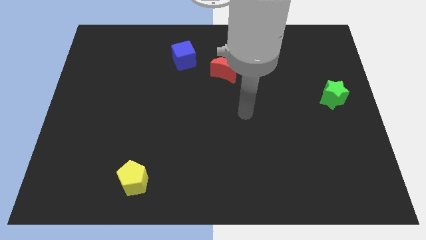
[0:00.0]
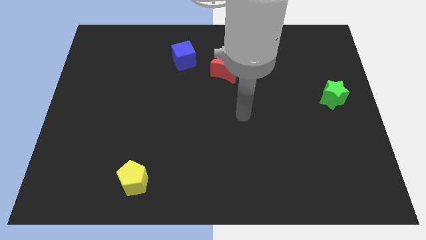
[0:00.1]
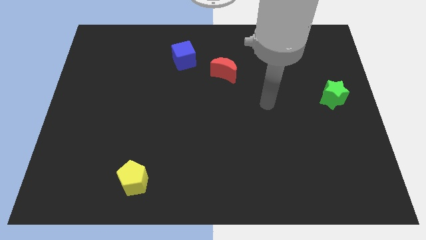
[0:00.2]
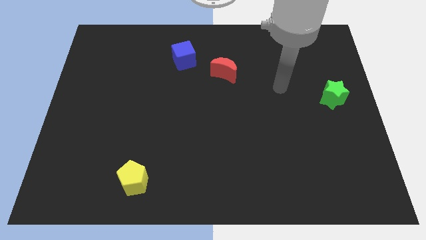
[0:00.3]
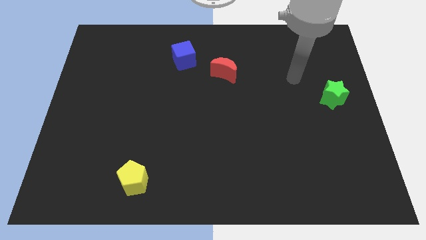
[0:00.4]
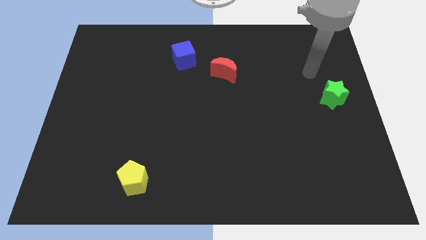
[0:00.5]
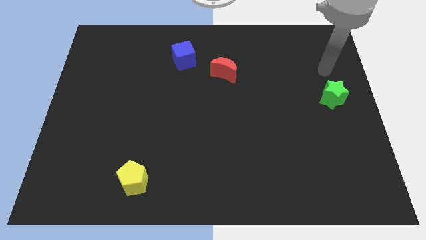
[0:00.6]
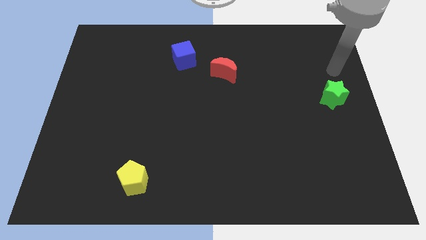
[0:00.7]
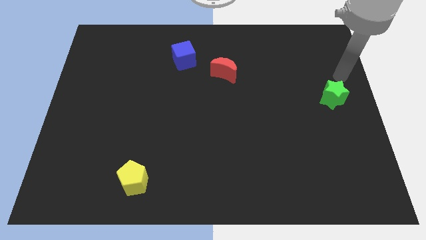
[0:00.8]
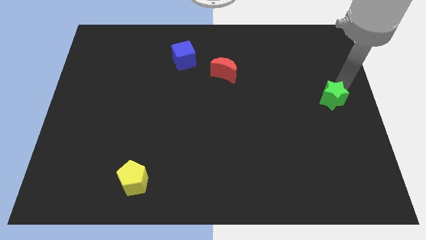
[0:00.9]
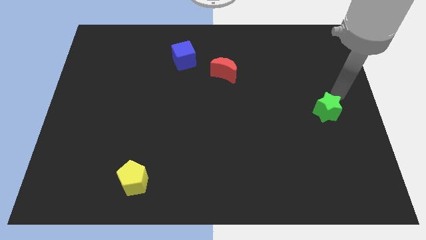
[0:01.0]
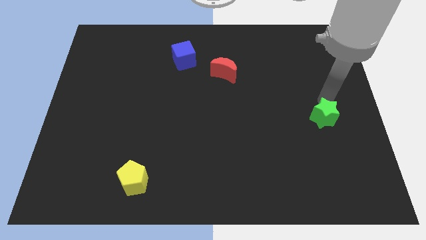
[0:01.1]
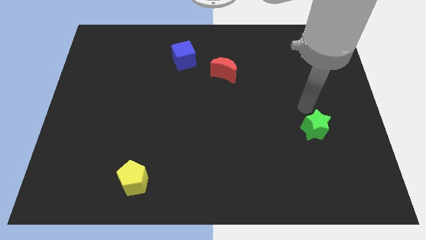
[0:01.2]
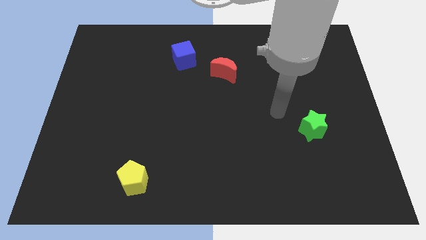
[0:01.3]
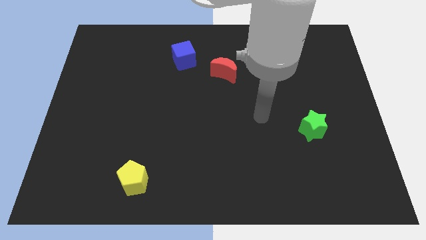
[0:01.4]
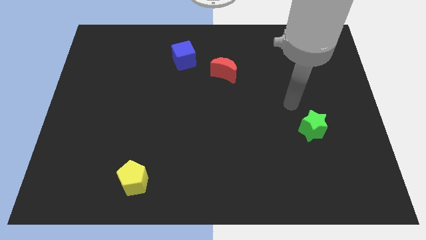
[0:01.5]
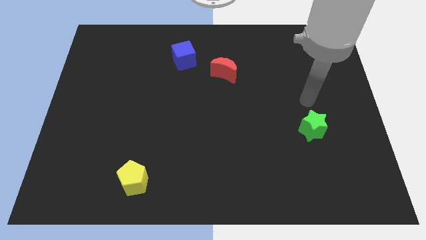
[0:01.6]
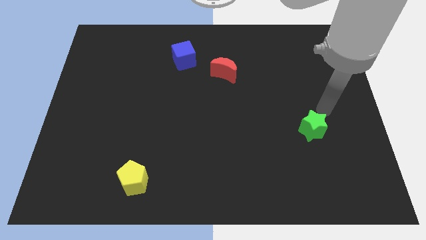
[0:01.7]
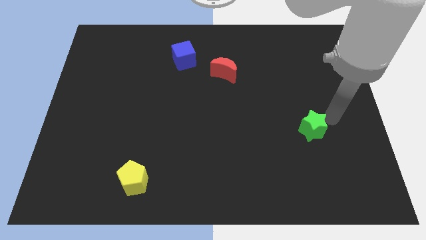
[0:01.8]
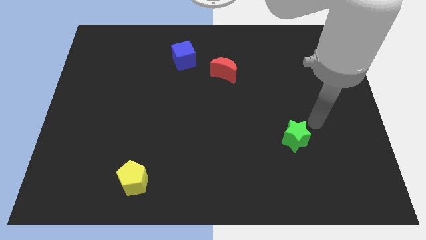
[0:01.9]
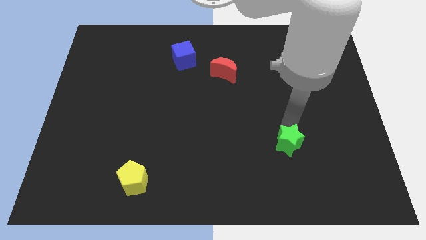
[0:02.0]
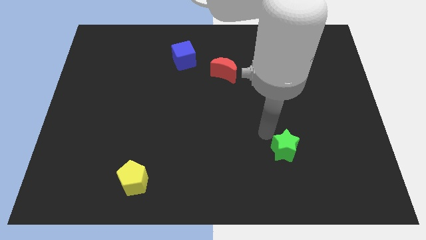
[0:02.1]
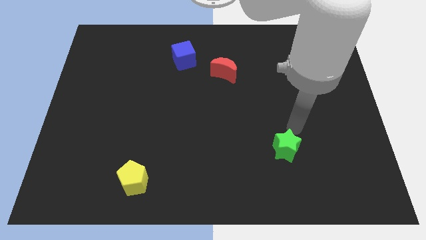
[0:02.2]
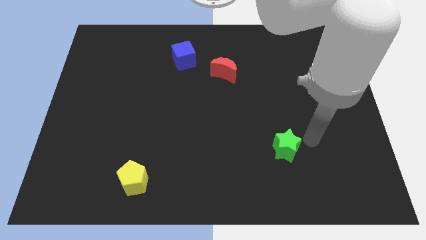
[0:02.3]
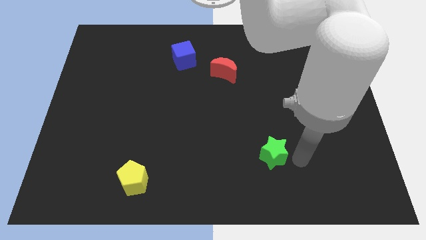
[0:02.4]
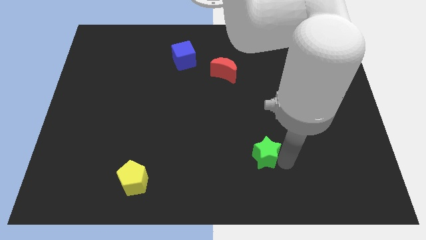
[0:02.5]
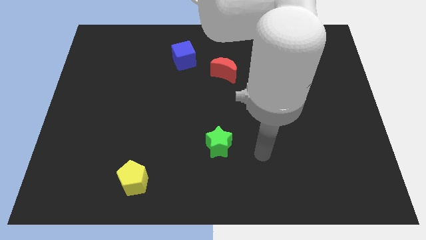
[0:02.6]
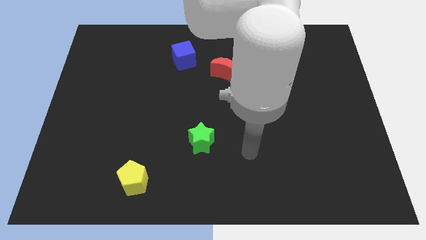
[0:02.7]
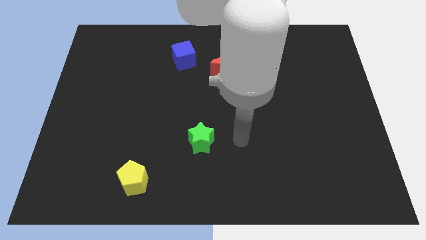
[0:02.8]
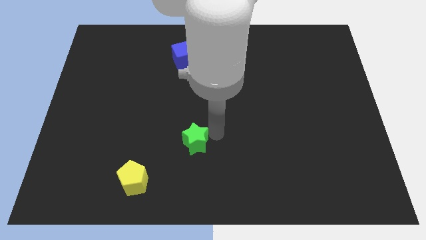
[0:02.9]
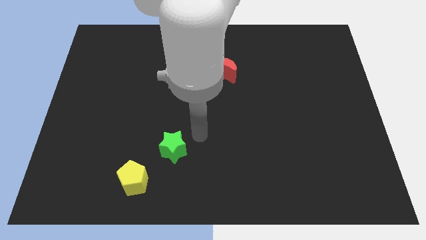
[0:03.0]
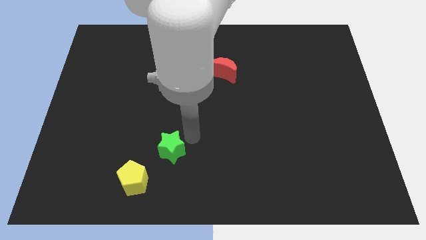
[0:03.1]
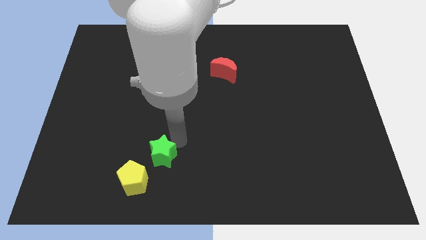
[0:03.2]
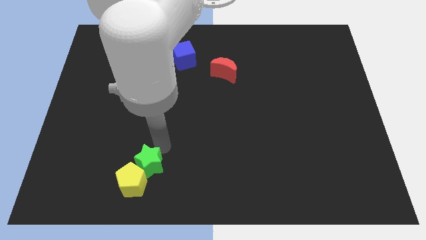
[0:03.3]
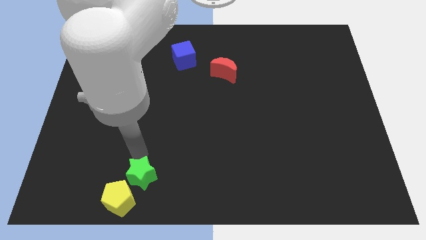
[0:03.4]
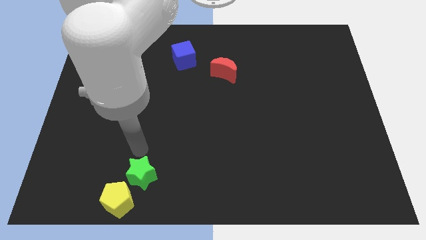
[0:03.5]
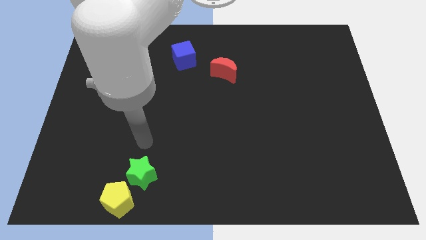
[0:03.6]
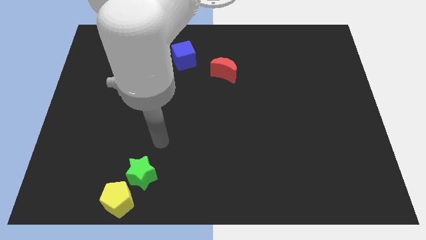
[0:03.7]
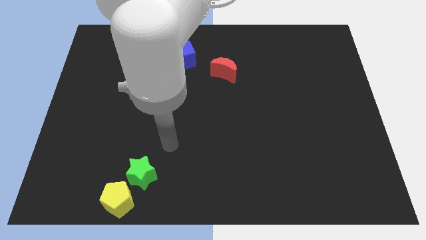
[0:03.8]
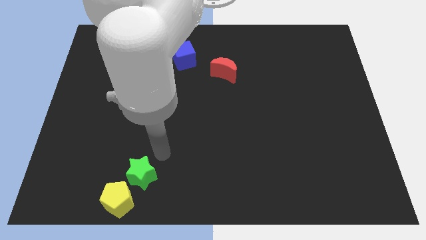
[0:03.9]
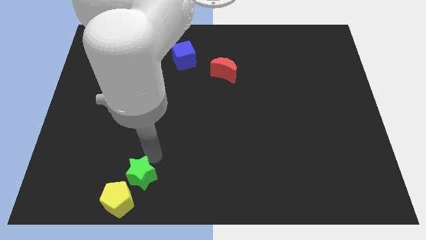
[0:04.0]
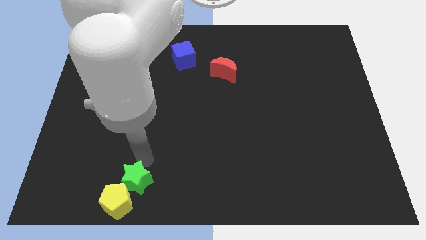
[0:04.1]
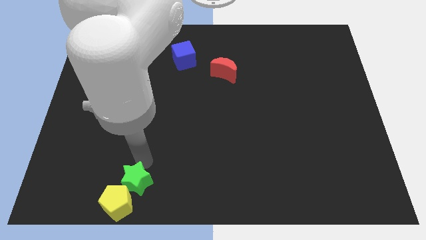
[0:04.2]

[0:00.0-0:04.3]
move the star towards the yellow pentagon

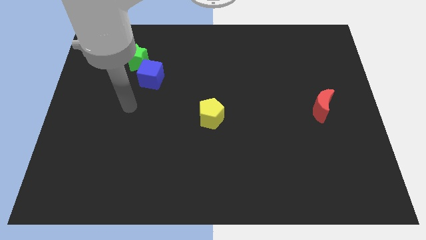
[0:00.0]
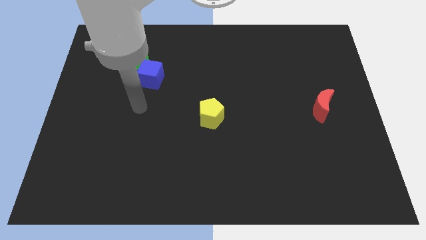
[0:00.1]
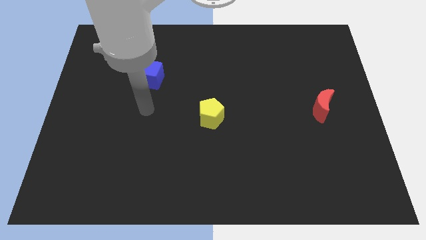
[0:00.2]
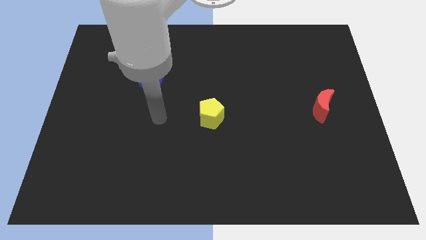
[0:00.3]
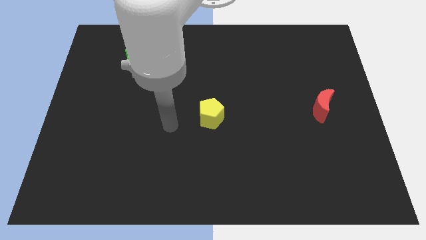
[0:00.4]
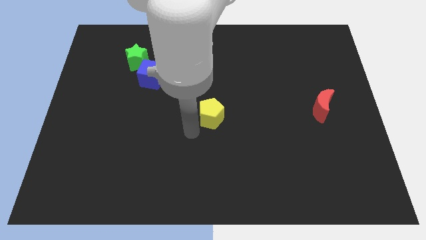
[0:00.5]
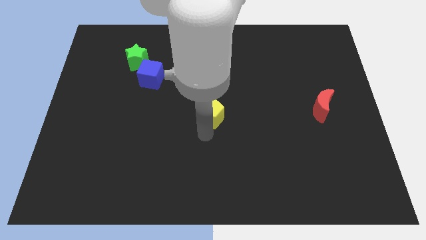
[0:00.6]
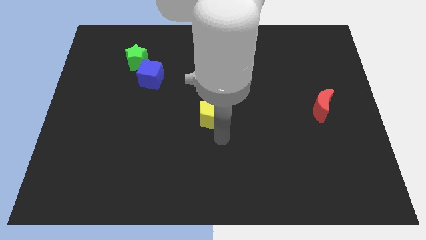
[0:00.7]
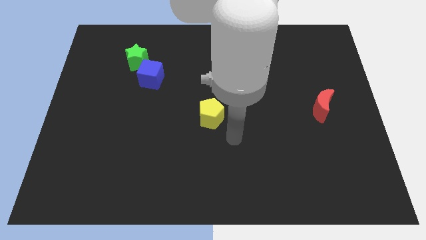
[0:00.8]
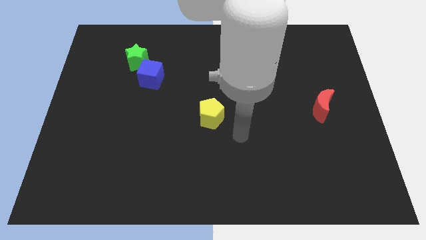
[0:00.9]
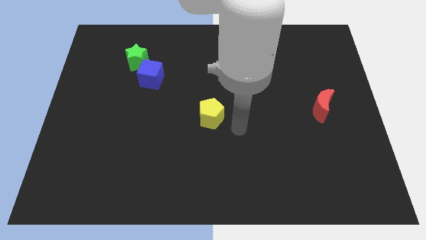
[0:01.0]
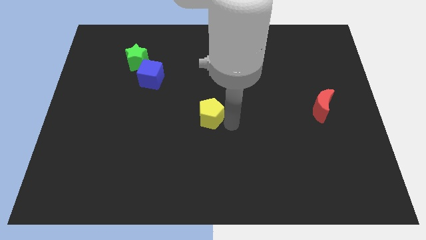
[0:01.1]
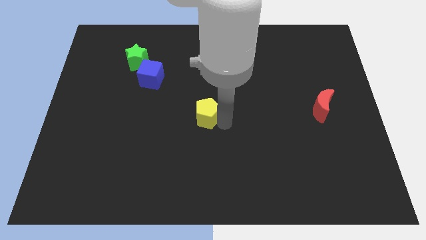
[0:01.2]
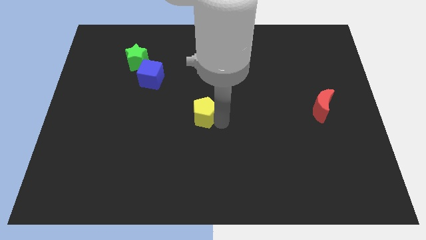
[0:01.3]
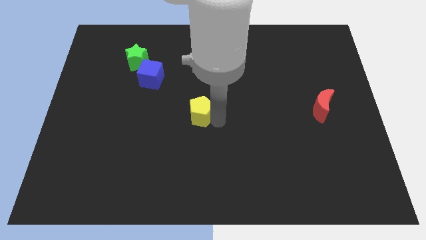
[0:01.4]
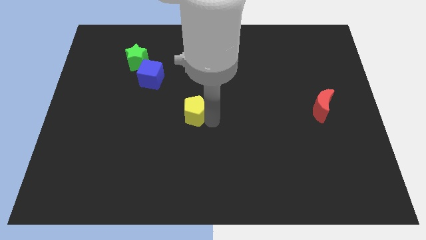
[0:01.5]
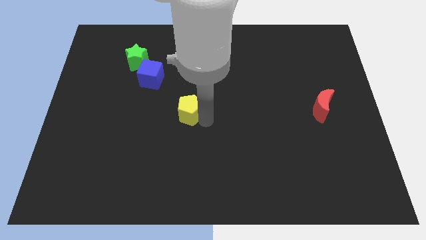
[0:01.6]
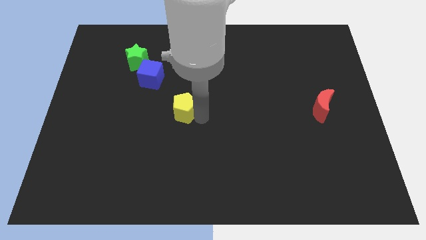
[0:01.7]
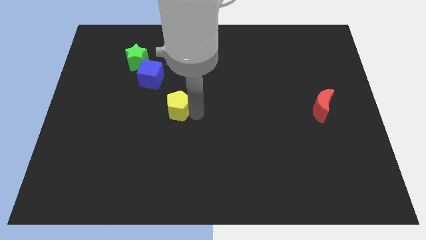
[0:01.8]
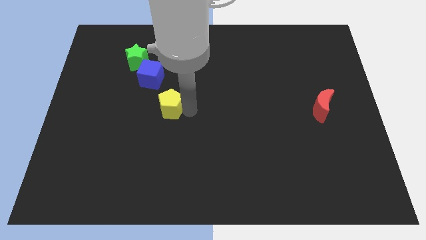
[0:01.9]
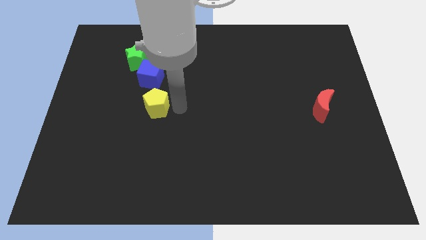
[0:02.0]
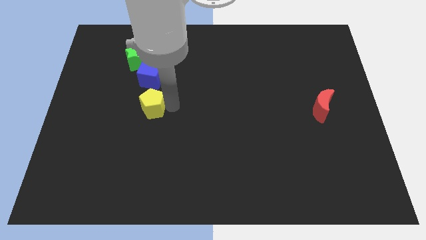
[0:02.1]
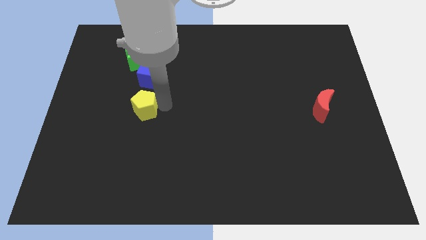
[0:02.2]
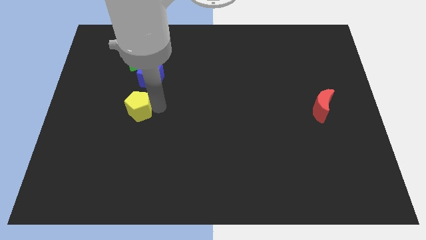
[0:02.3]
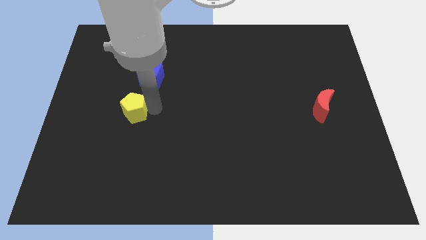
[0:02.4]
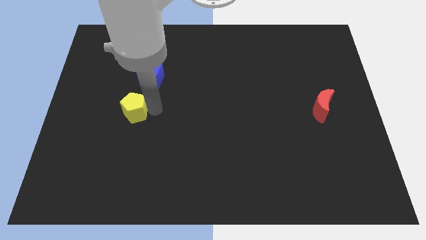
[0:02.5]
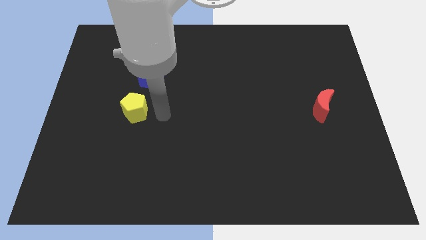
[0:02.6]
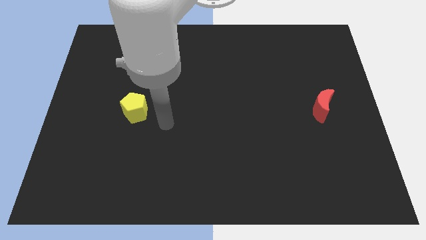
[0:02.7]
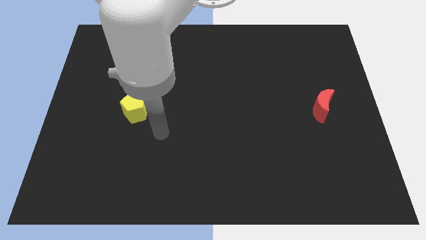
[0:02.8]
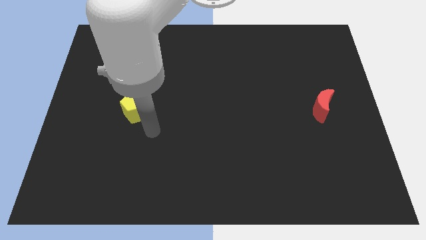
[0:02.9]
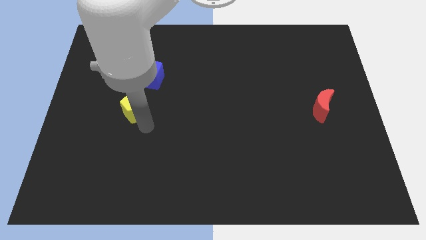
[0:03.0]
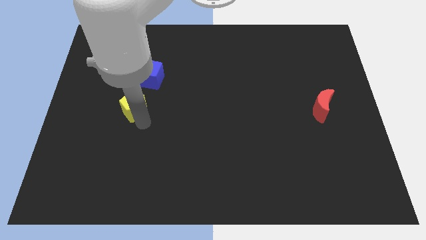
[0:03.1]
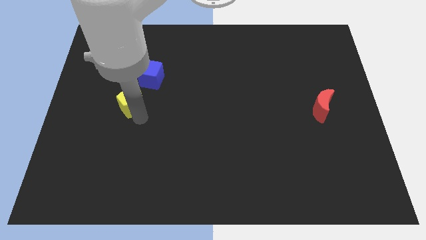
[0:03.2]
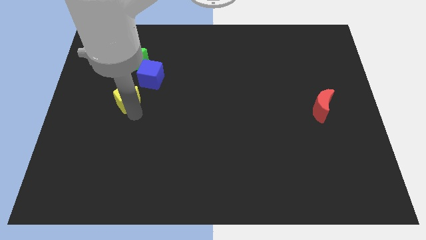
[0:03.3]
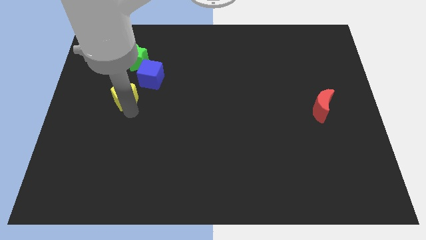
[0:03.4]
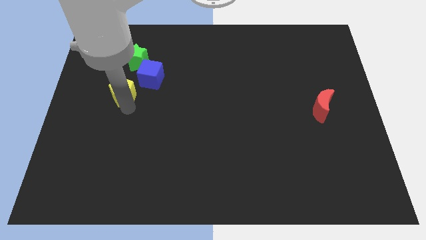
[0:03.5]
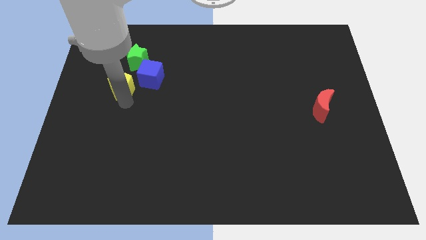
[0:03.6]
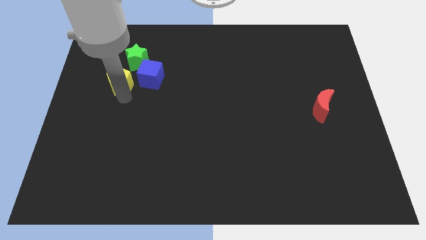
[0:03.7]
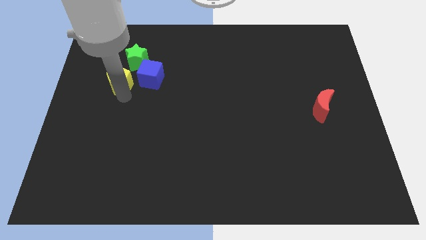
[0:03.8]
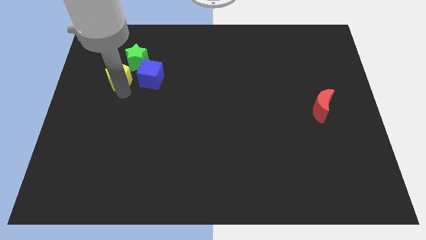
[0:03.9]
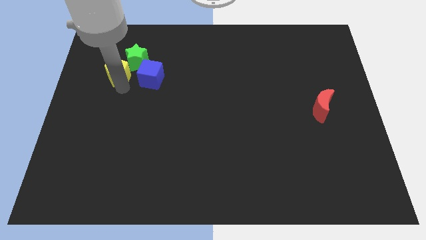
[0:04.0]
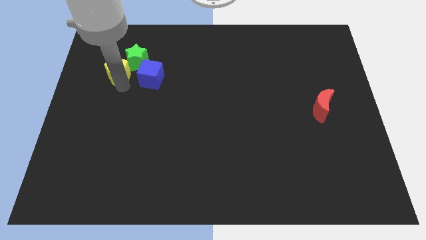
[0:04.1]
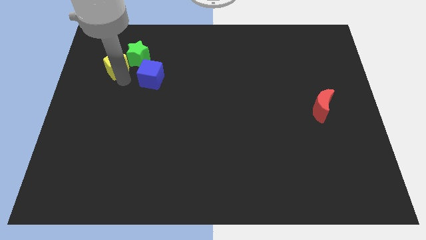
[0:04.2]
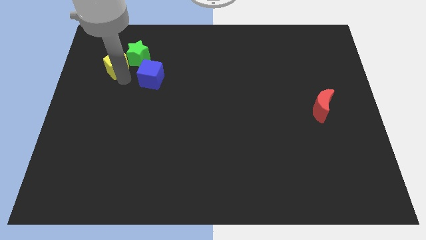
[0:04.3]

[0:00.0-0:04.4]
slide the yellow pentagon to the green block
